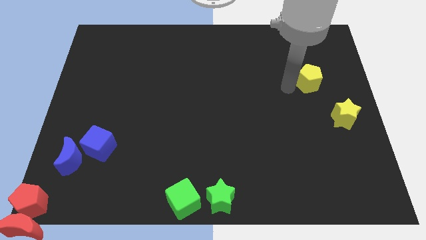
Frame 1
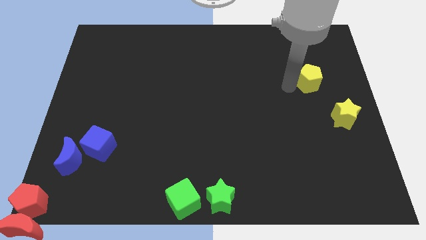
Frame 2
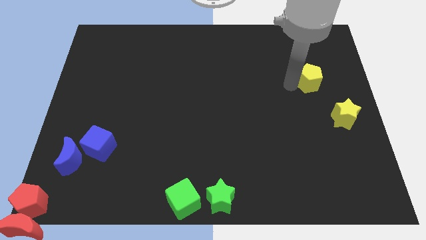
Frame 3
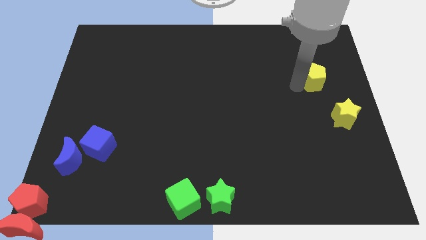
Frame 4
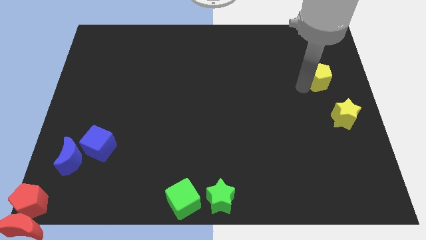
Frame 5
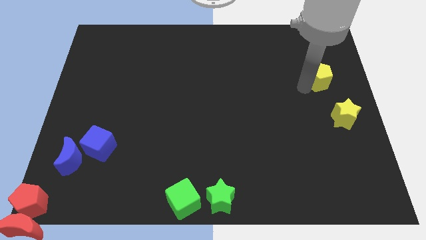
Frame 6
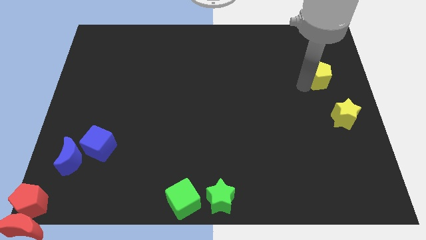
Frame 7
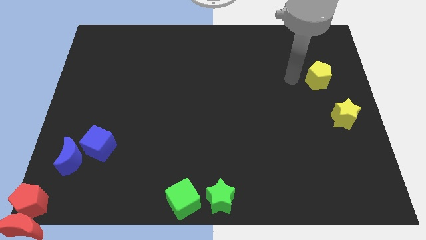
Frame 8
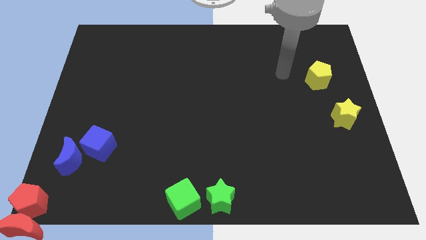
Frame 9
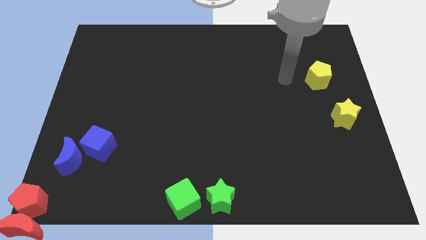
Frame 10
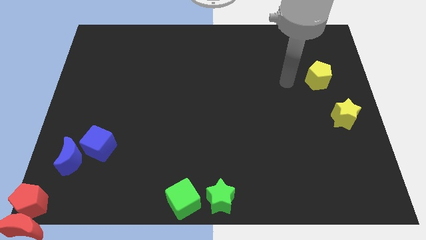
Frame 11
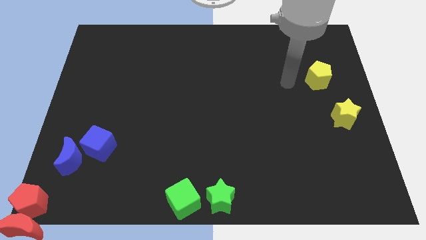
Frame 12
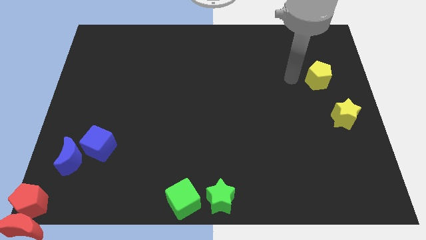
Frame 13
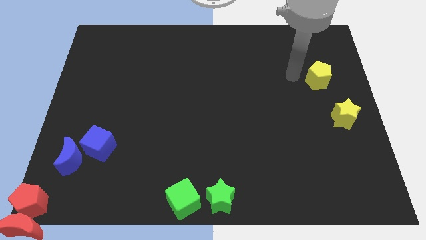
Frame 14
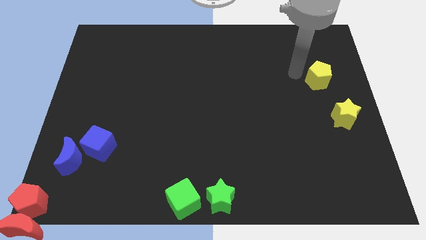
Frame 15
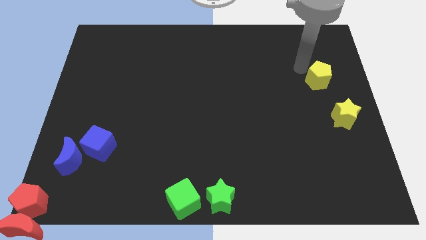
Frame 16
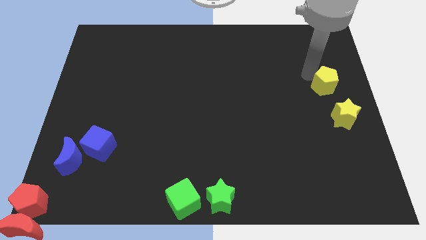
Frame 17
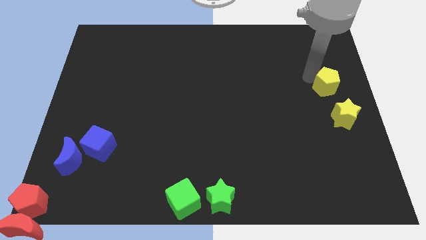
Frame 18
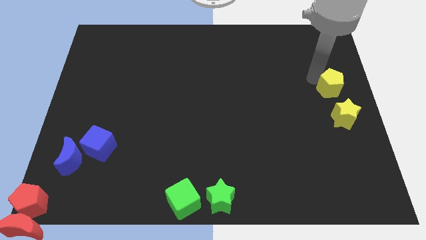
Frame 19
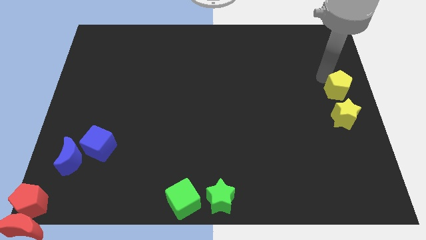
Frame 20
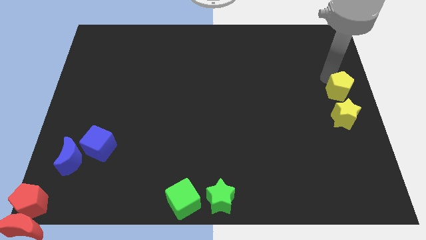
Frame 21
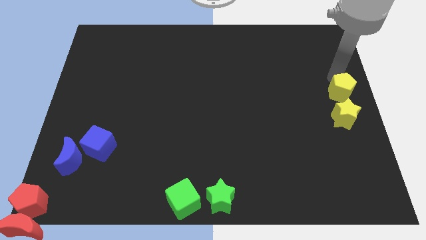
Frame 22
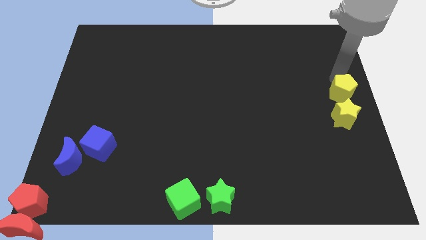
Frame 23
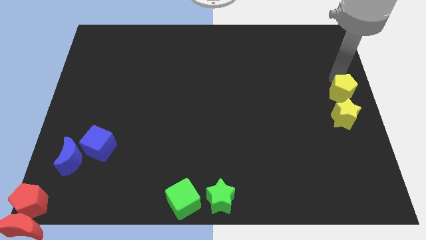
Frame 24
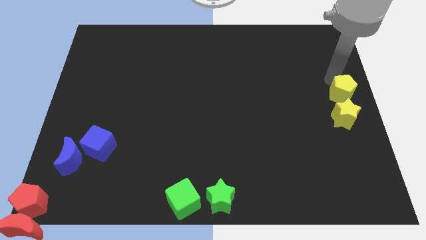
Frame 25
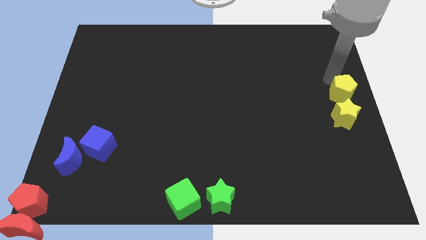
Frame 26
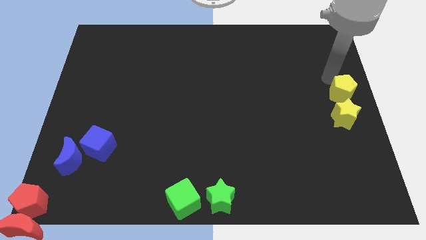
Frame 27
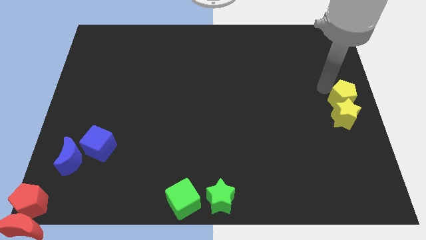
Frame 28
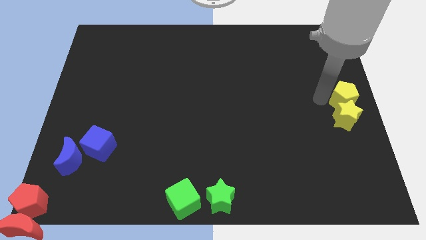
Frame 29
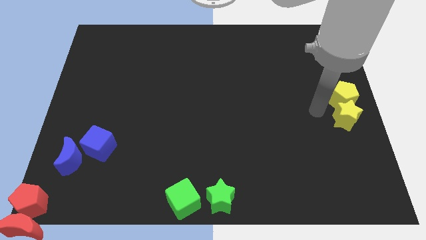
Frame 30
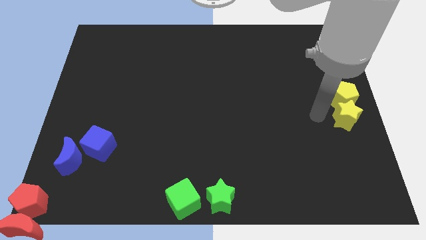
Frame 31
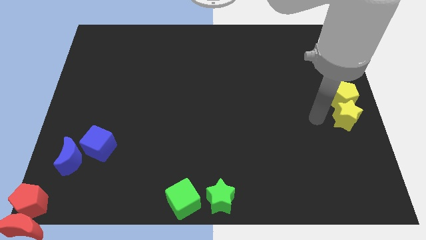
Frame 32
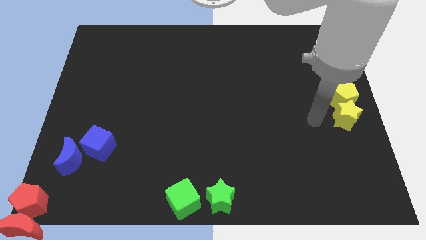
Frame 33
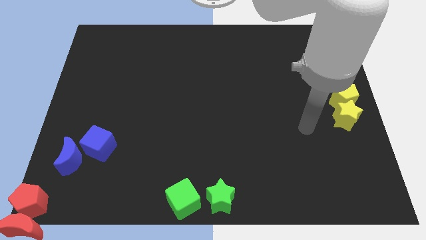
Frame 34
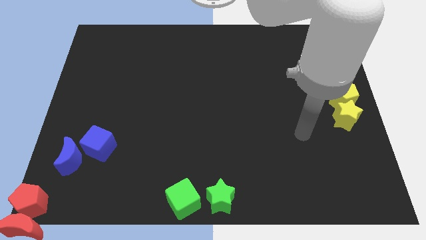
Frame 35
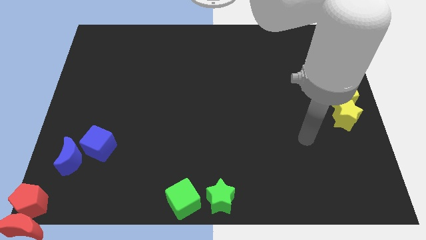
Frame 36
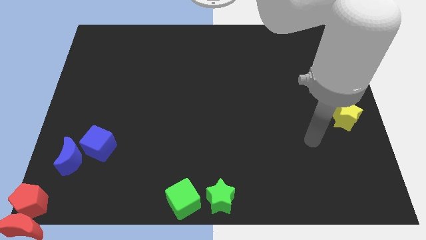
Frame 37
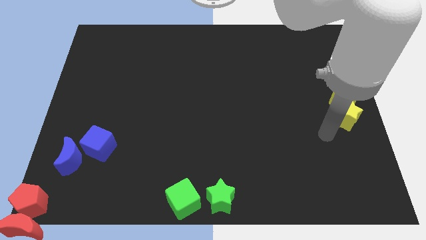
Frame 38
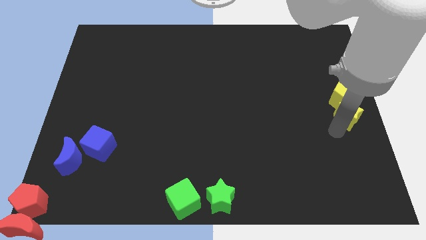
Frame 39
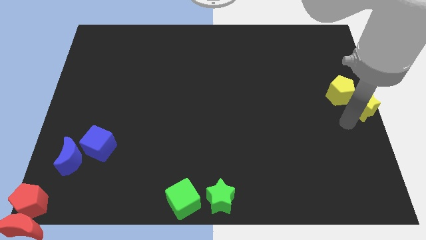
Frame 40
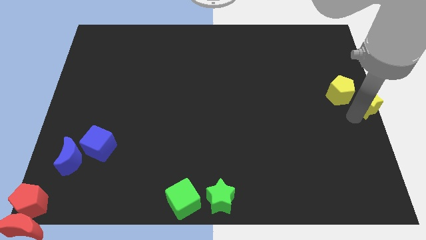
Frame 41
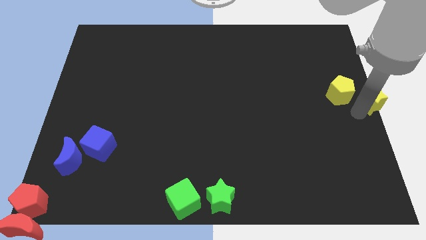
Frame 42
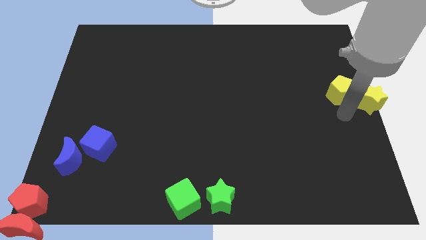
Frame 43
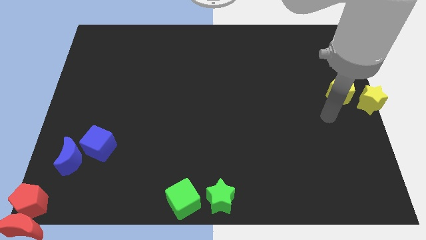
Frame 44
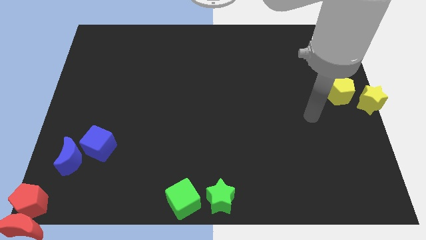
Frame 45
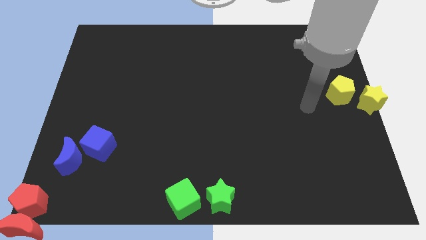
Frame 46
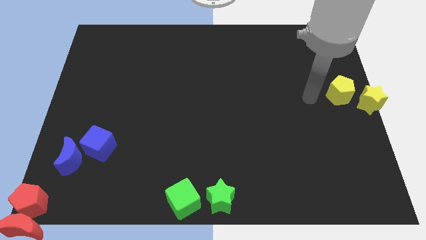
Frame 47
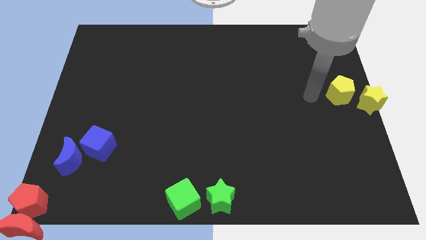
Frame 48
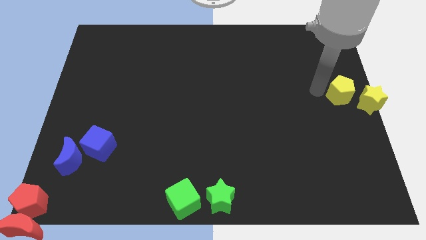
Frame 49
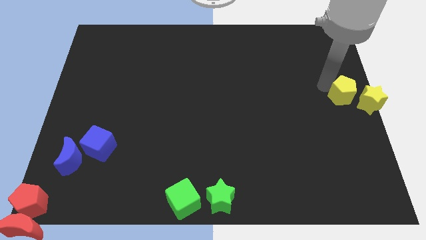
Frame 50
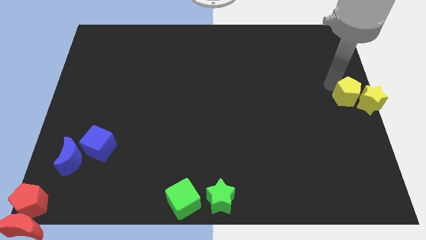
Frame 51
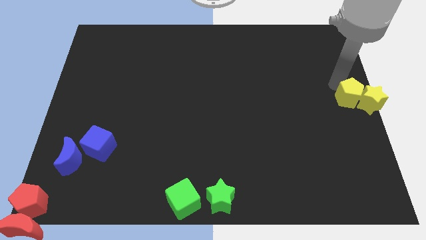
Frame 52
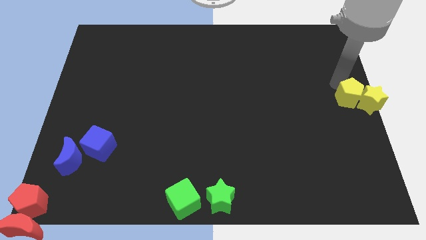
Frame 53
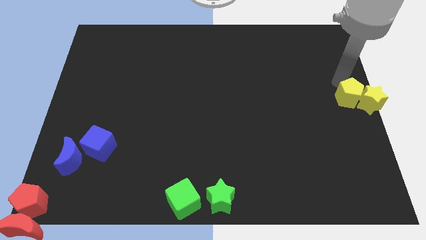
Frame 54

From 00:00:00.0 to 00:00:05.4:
place the yellow blocks to center right of the board

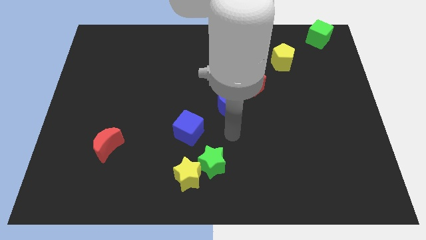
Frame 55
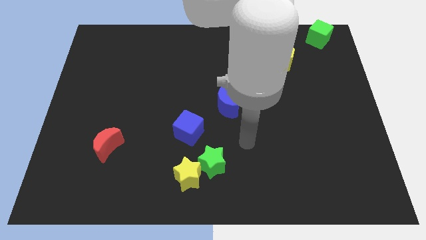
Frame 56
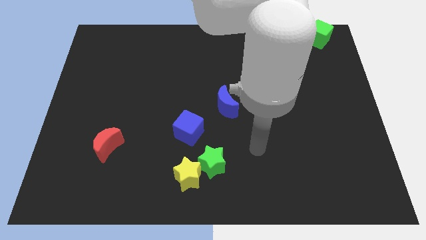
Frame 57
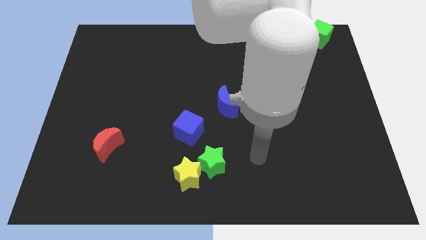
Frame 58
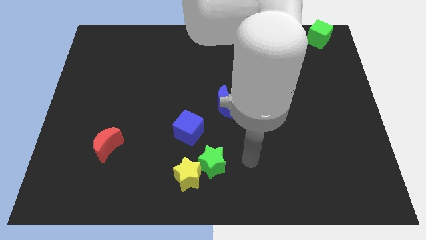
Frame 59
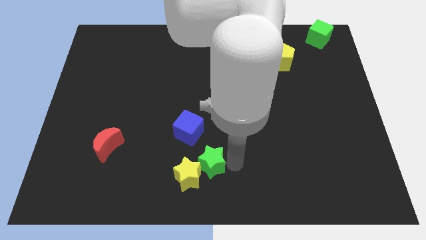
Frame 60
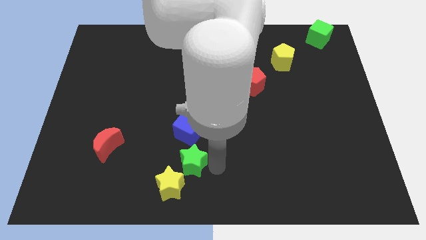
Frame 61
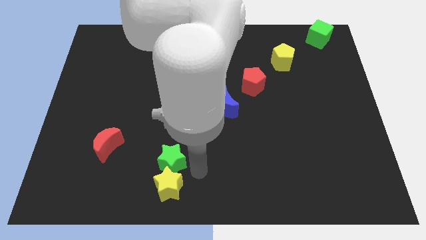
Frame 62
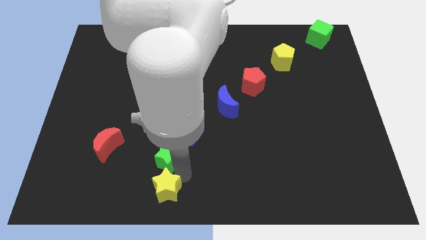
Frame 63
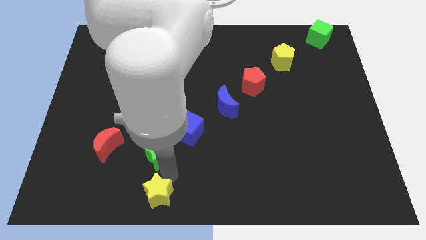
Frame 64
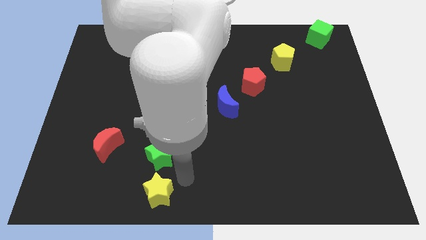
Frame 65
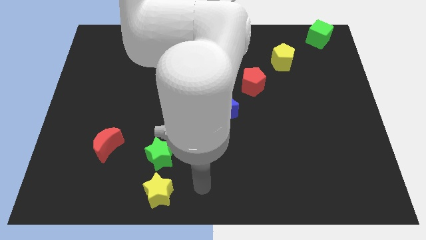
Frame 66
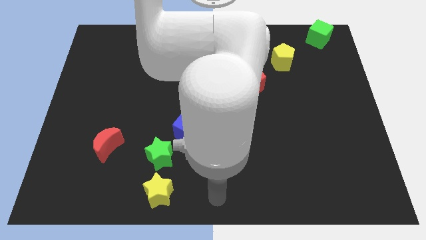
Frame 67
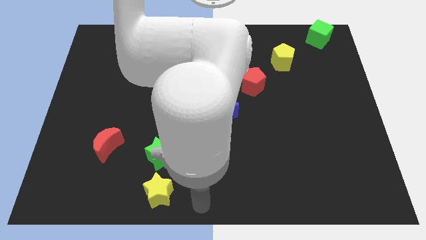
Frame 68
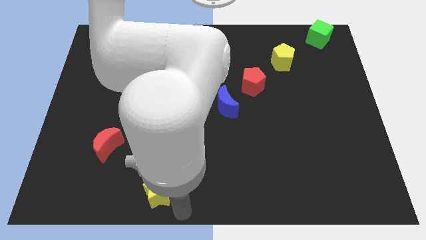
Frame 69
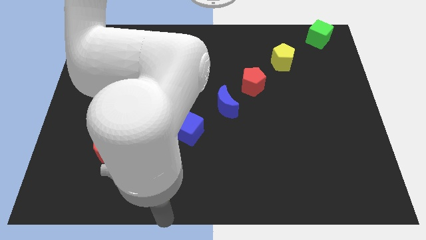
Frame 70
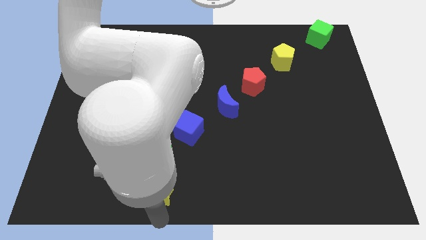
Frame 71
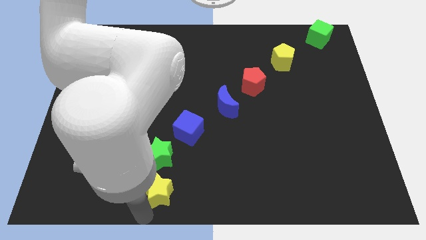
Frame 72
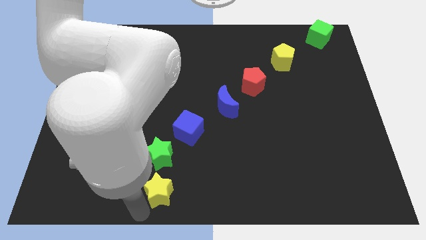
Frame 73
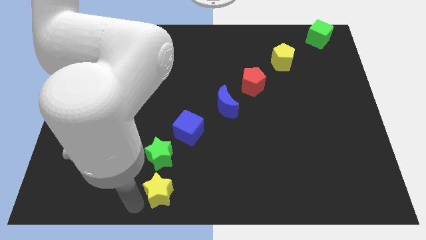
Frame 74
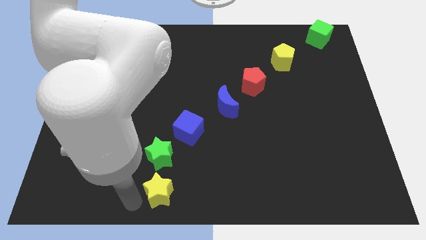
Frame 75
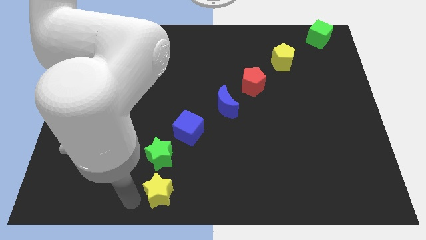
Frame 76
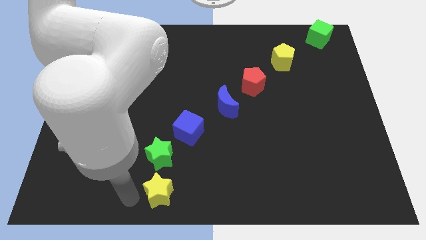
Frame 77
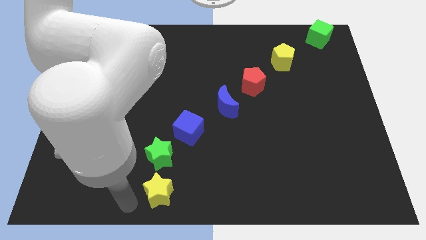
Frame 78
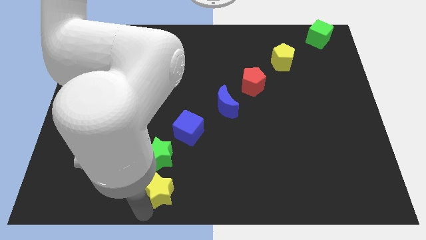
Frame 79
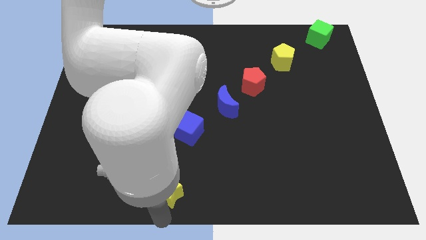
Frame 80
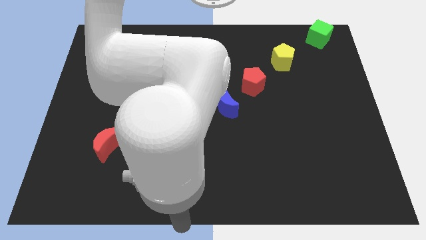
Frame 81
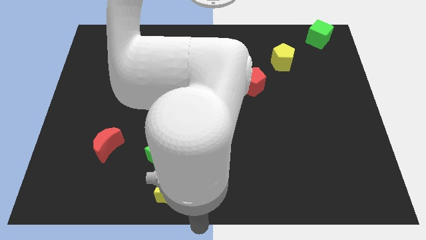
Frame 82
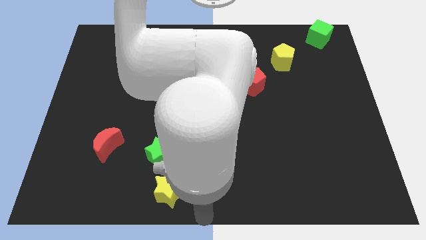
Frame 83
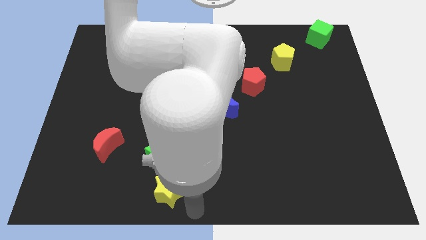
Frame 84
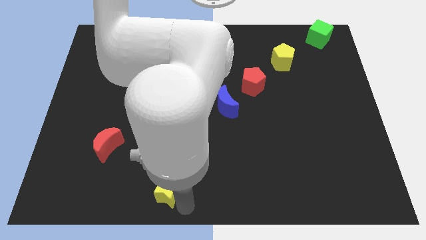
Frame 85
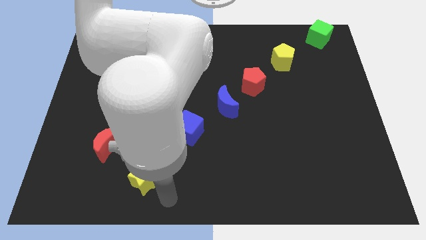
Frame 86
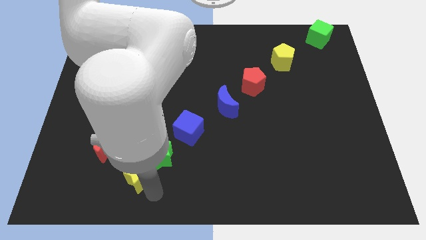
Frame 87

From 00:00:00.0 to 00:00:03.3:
push the yellow star and green star to the left of the board

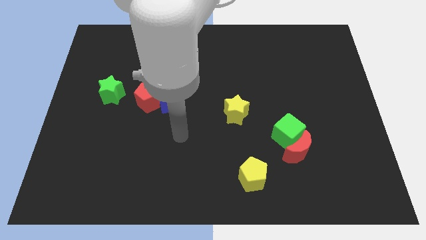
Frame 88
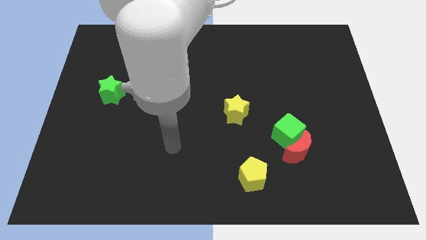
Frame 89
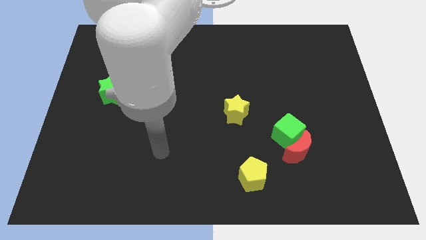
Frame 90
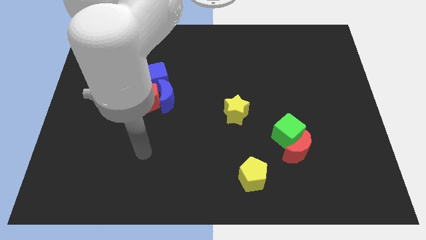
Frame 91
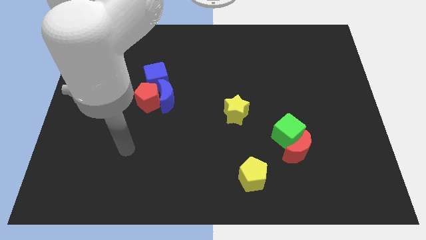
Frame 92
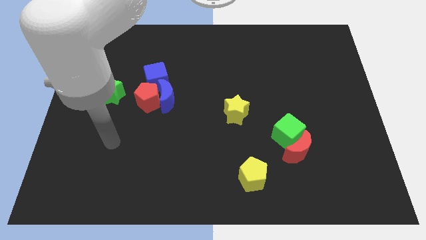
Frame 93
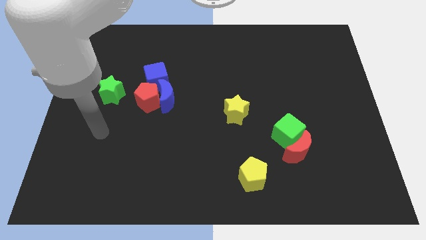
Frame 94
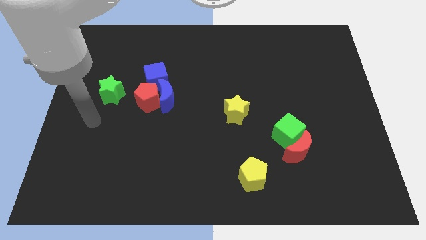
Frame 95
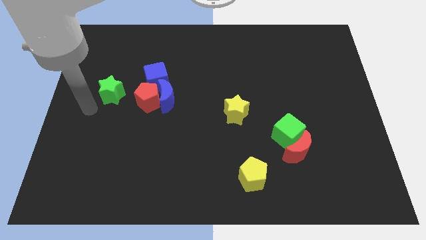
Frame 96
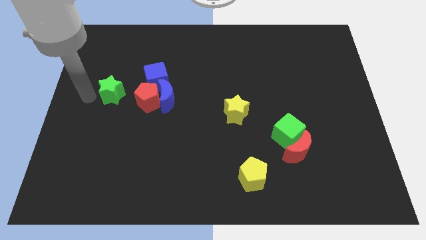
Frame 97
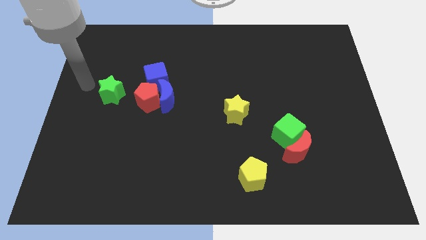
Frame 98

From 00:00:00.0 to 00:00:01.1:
move the arm to the left side of the green star
